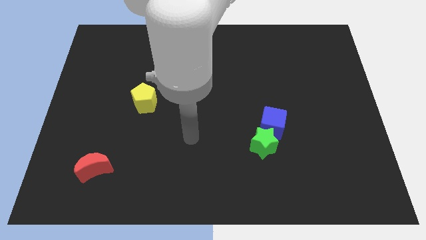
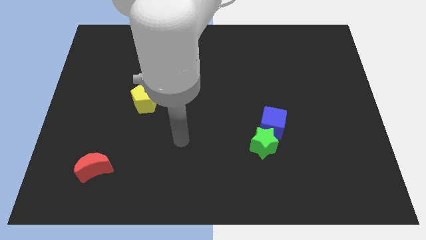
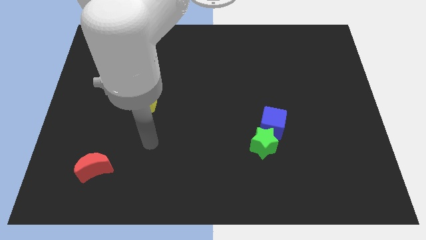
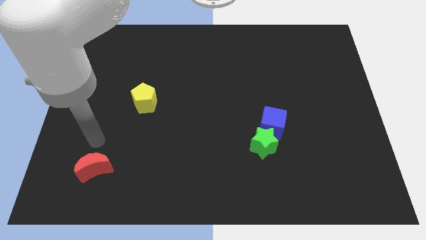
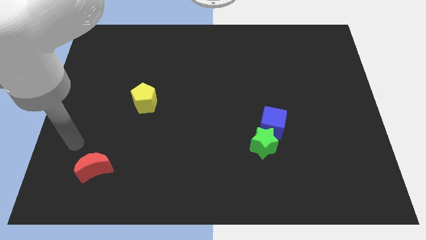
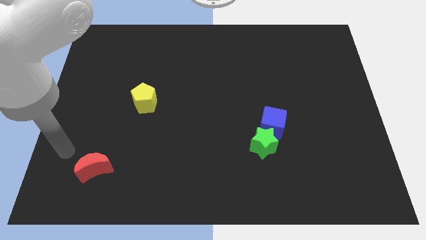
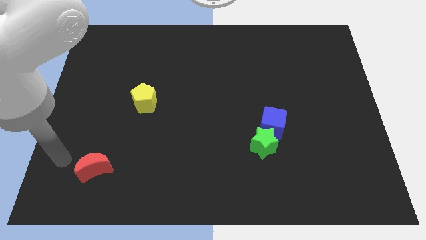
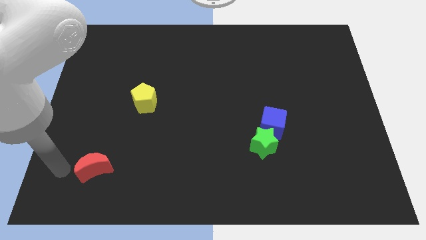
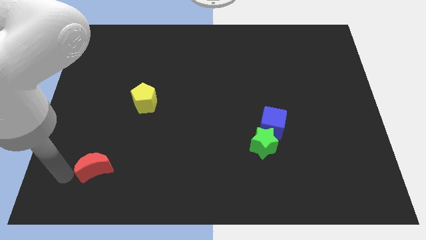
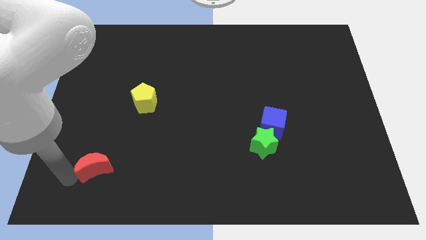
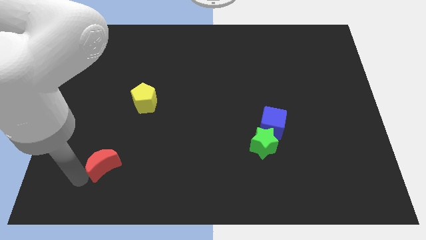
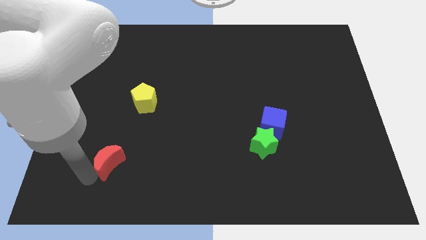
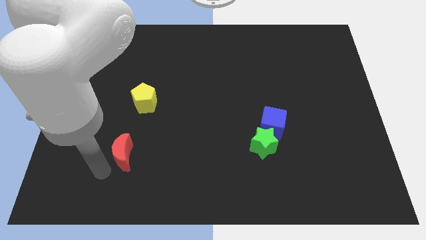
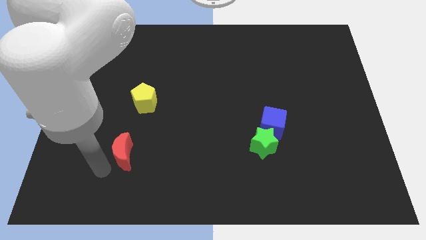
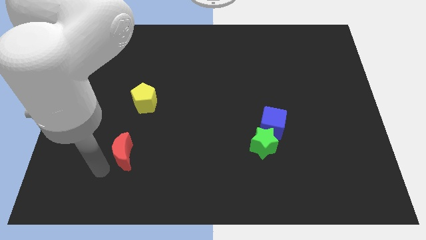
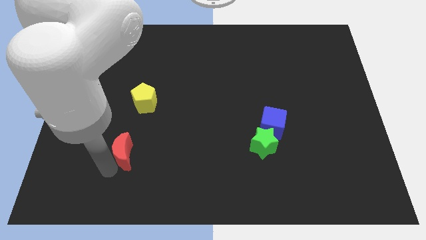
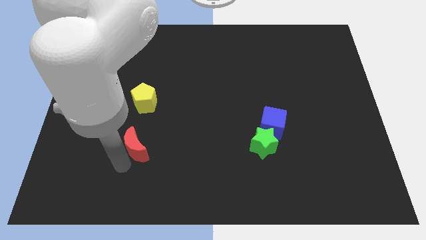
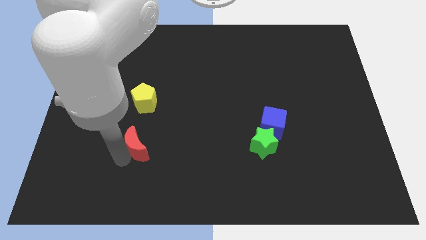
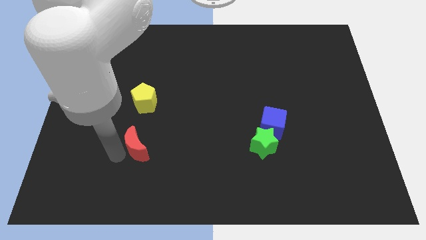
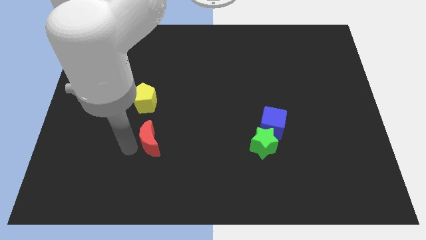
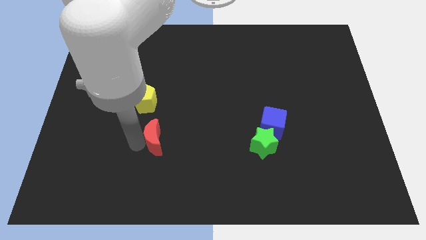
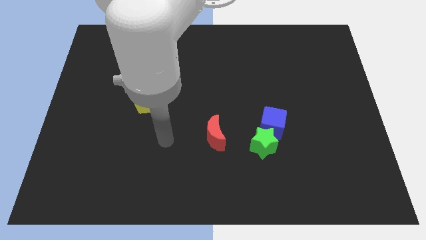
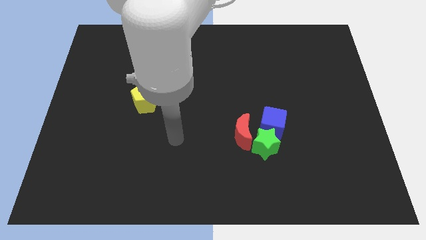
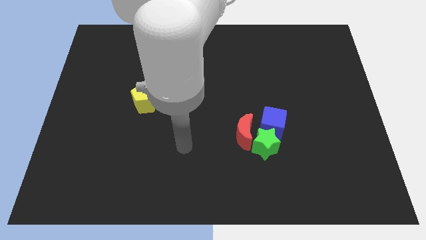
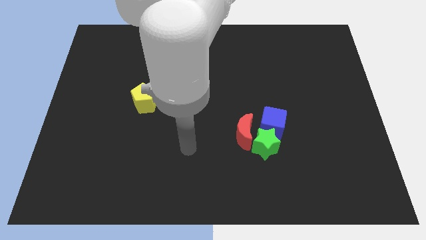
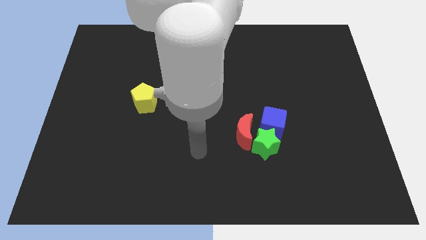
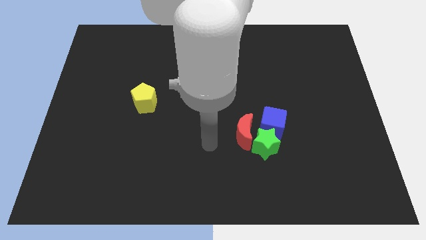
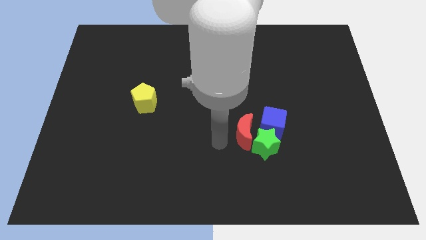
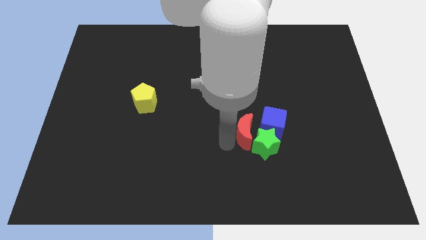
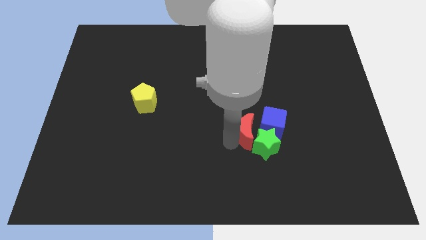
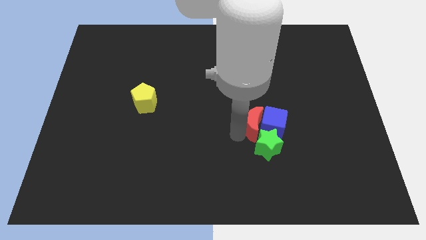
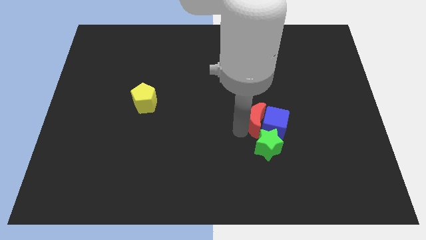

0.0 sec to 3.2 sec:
move the moon towards the blue cube

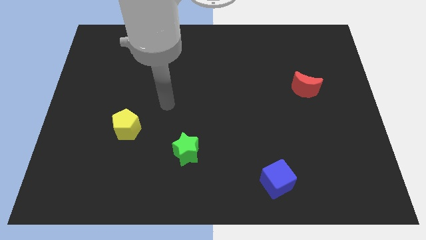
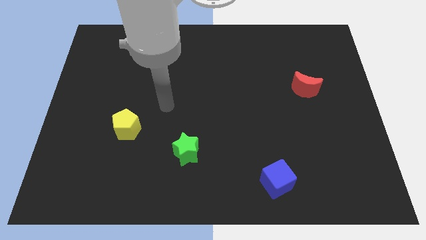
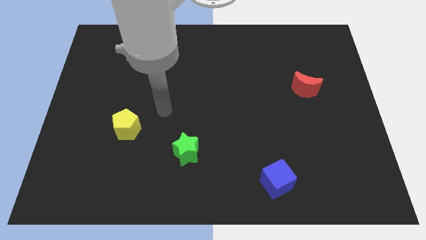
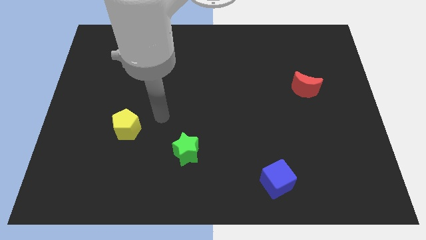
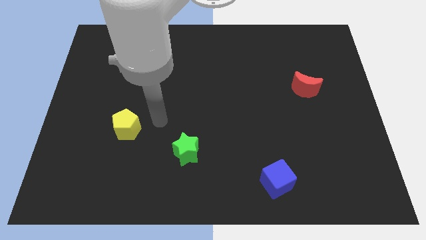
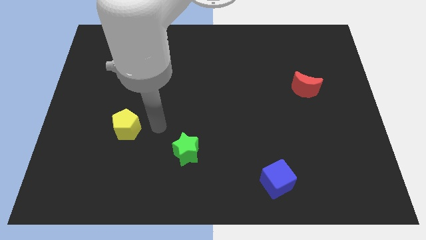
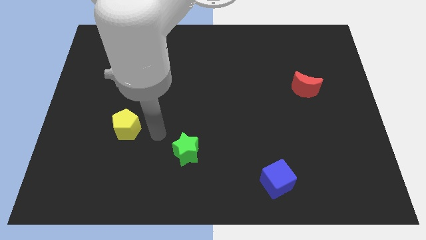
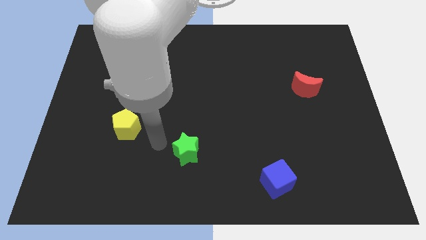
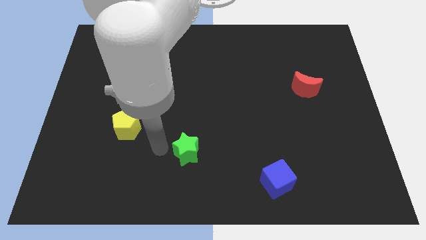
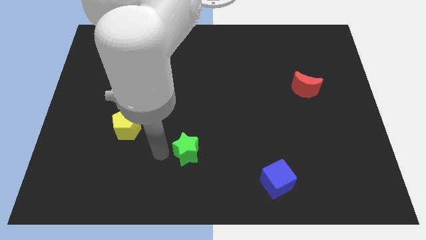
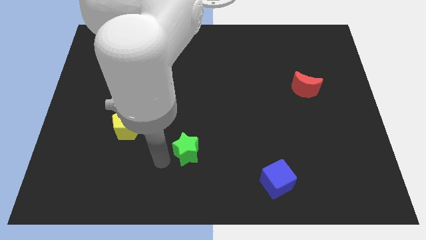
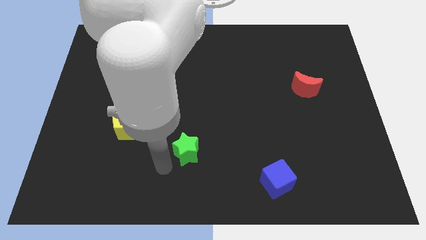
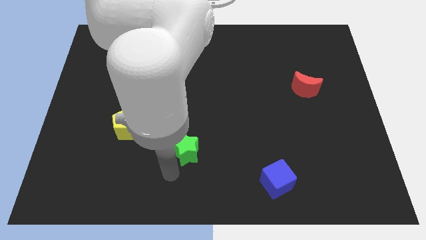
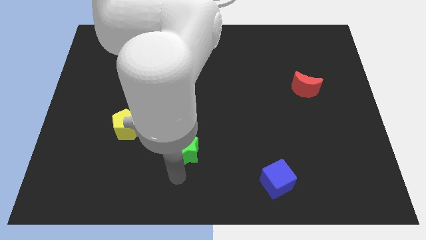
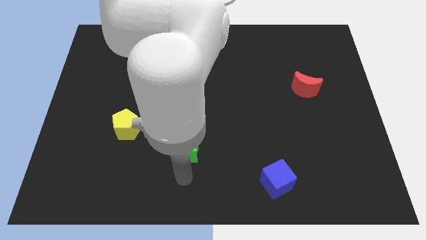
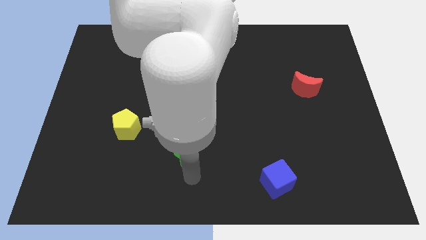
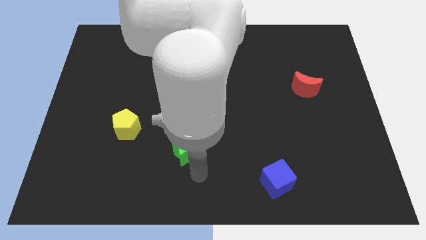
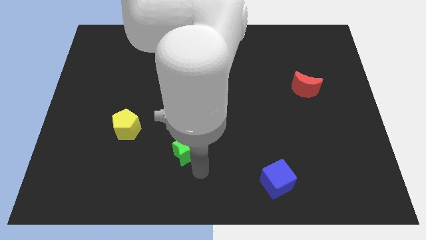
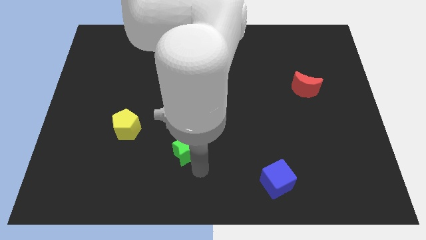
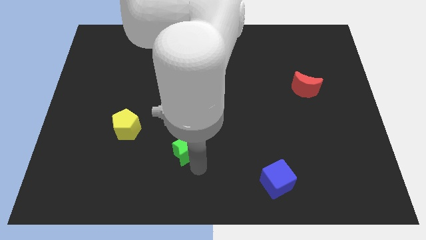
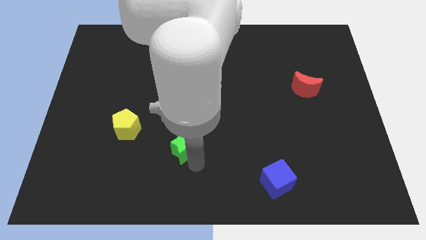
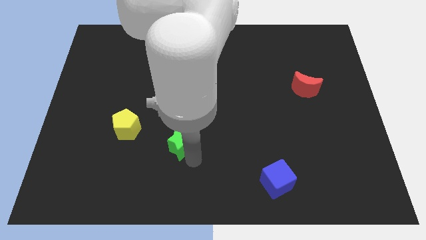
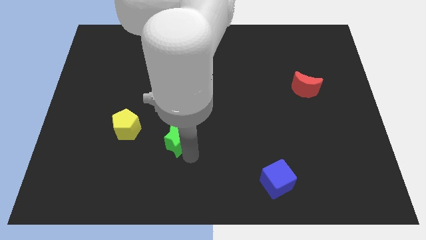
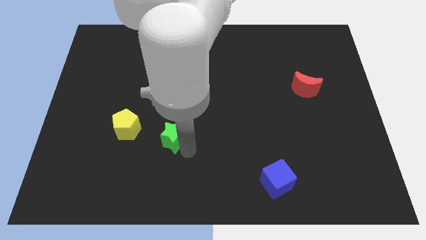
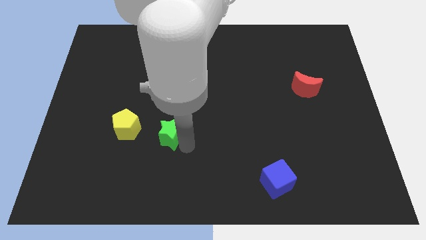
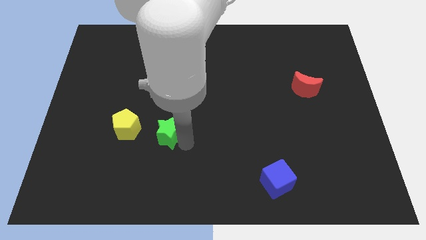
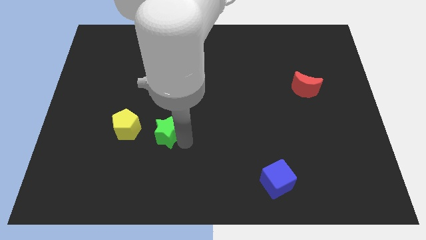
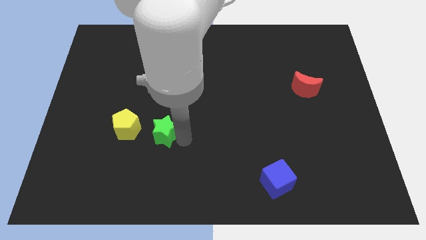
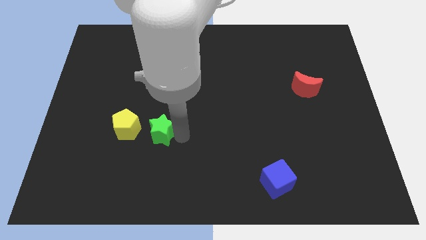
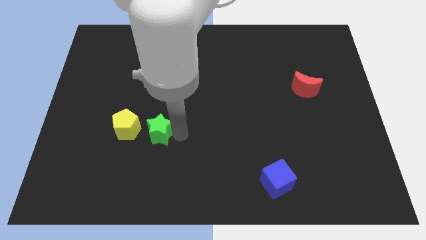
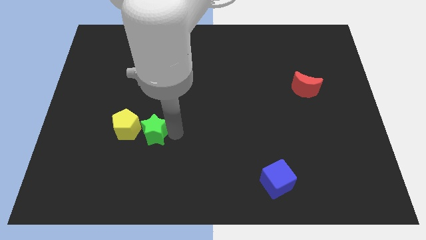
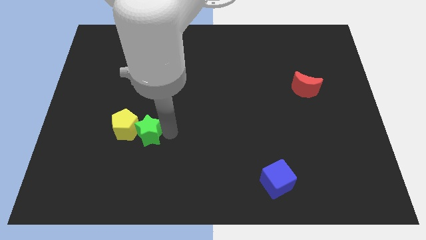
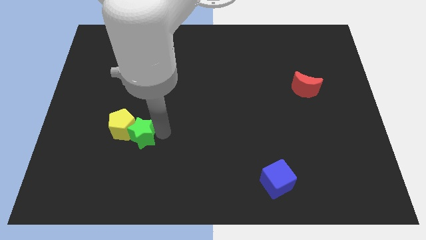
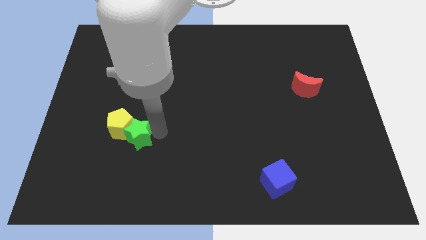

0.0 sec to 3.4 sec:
move the green star towards the yellow block

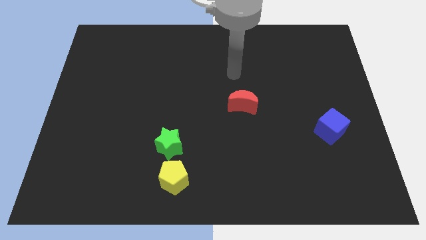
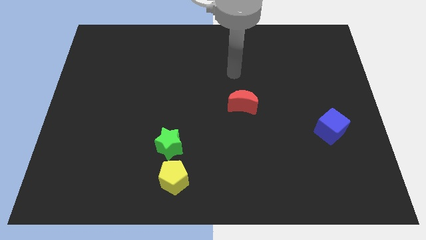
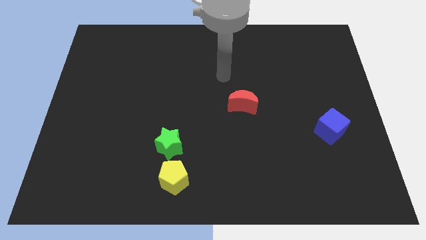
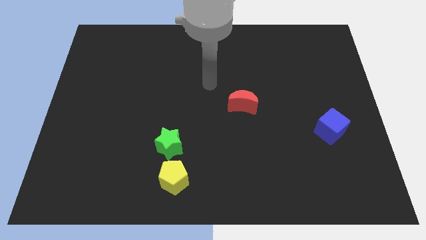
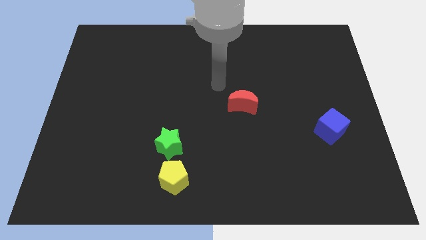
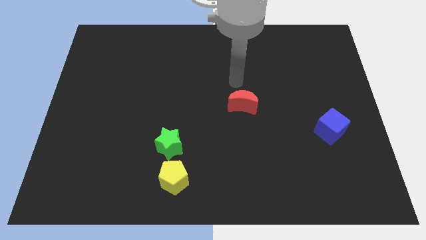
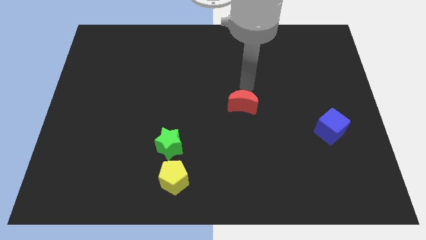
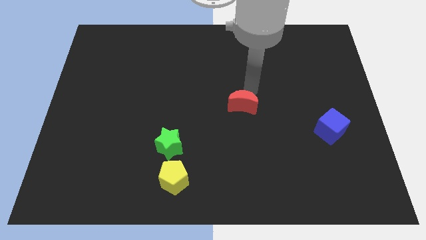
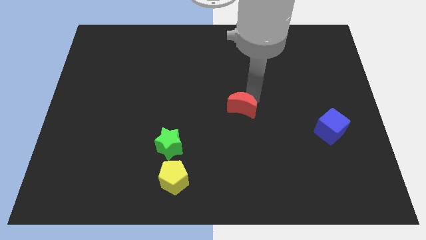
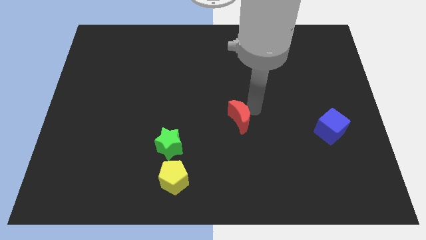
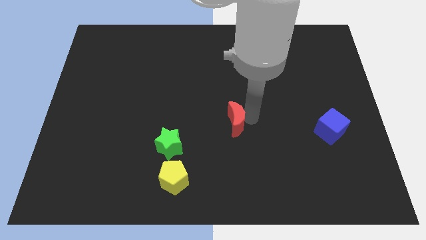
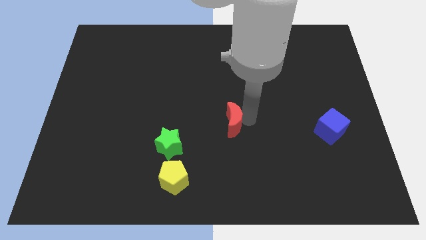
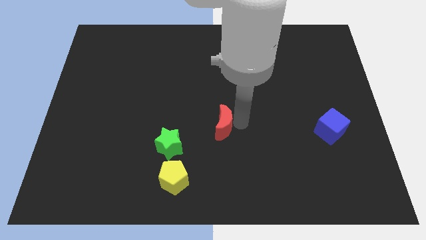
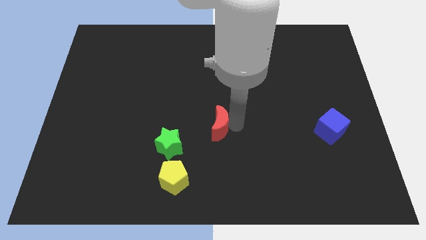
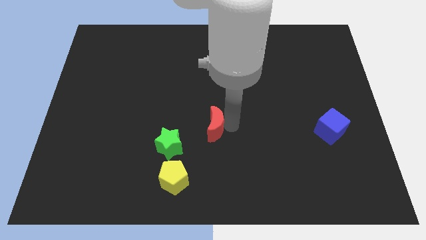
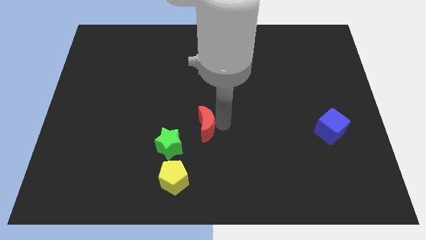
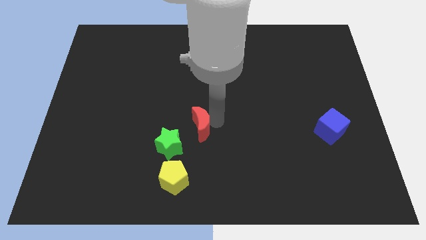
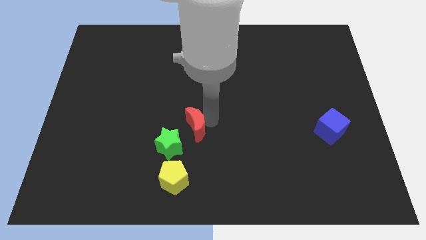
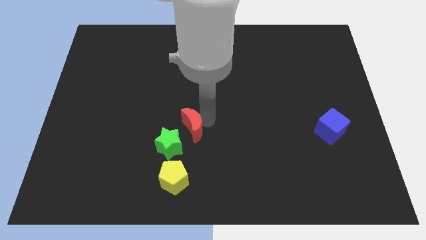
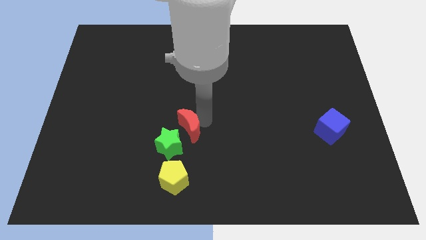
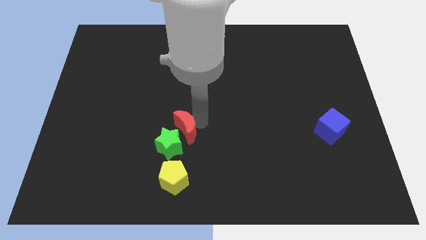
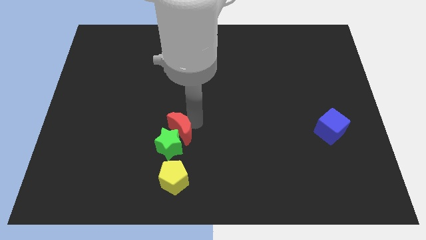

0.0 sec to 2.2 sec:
slide the red block to the star
